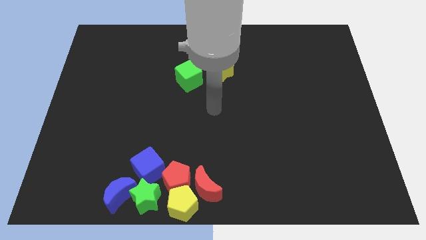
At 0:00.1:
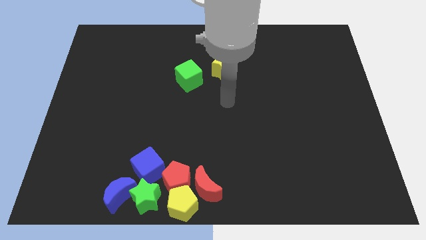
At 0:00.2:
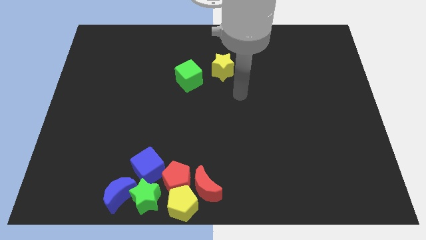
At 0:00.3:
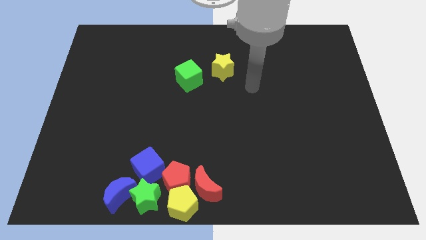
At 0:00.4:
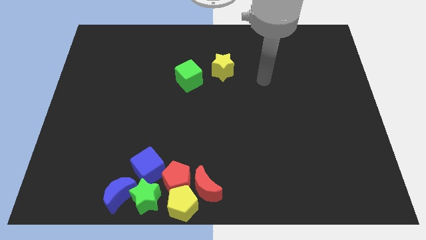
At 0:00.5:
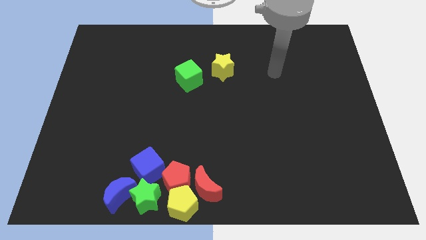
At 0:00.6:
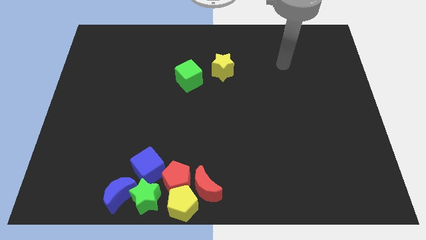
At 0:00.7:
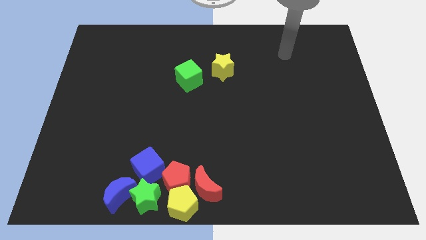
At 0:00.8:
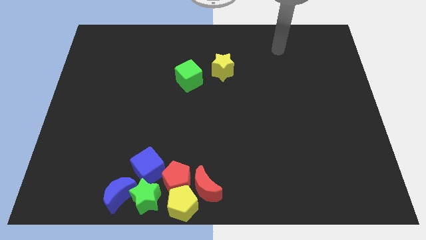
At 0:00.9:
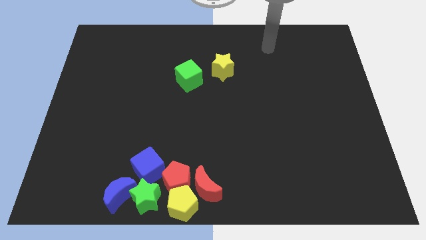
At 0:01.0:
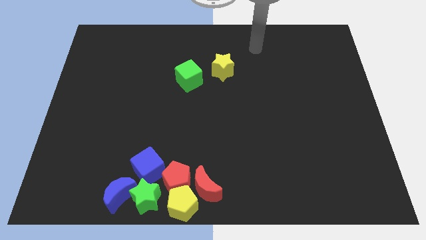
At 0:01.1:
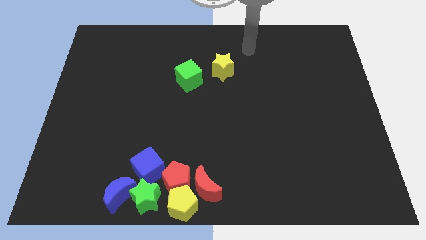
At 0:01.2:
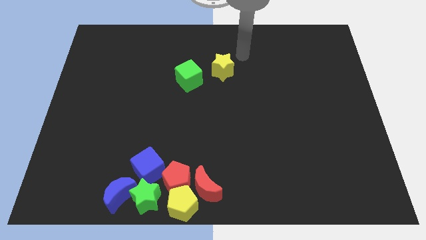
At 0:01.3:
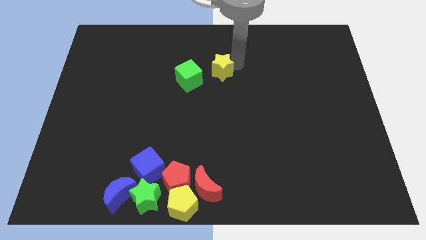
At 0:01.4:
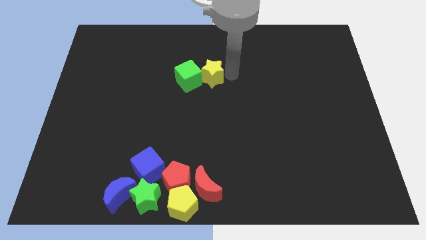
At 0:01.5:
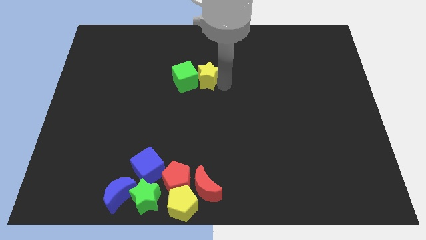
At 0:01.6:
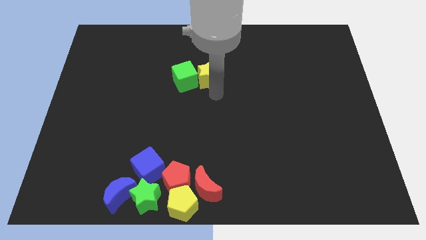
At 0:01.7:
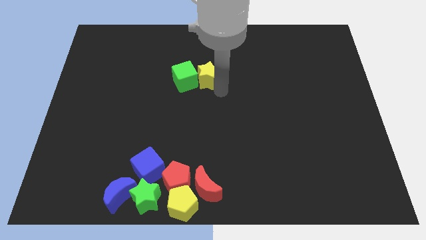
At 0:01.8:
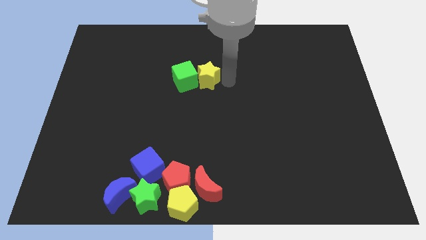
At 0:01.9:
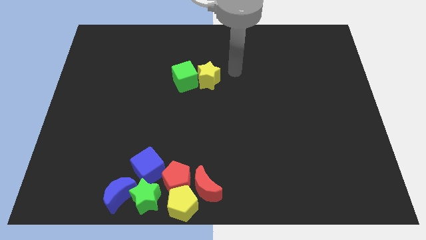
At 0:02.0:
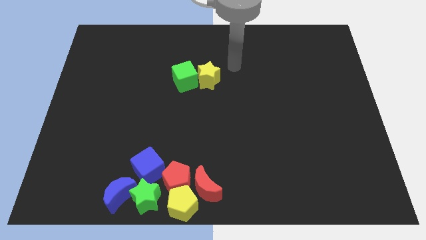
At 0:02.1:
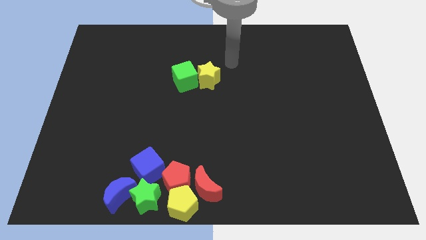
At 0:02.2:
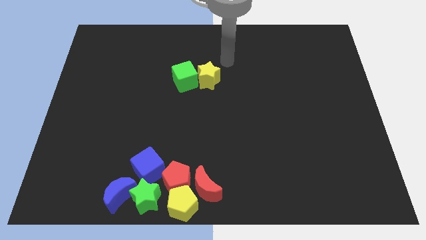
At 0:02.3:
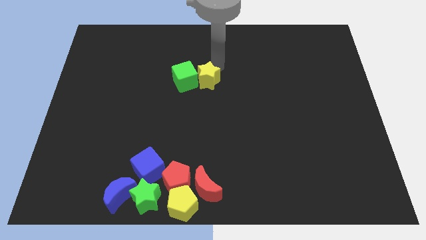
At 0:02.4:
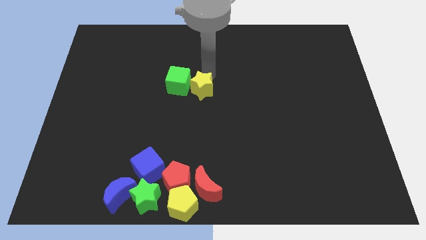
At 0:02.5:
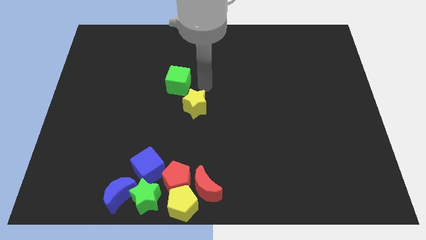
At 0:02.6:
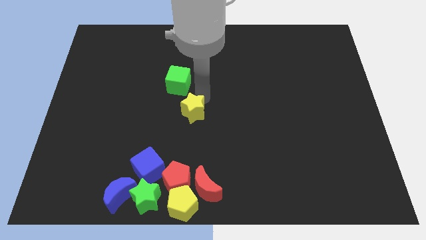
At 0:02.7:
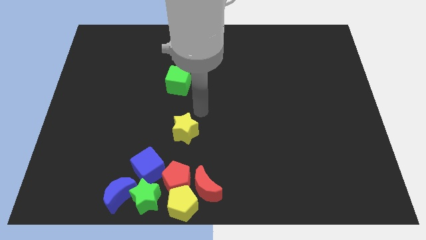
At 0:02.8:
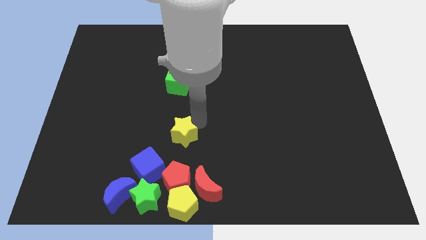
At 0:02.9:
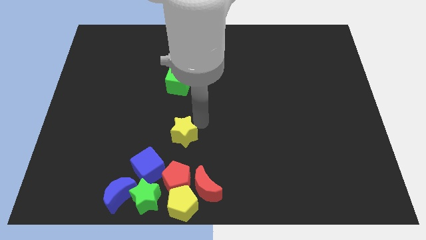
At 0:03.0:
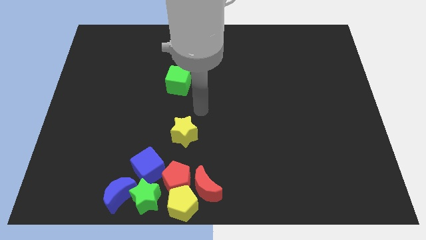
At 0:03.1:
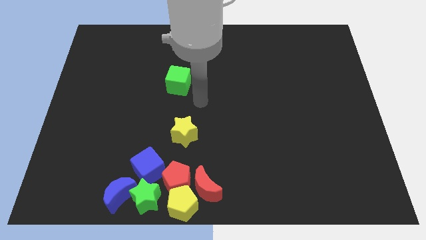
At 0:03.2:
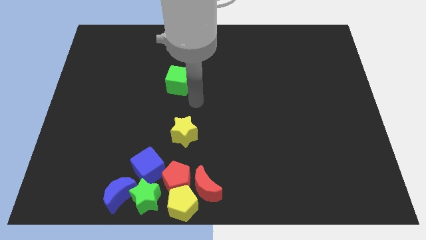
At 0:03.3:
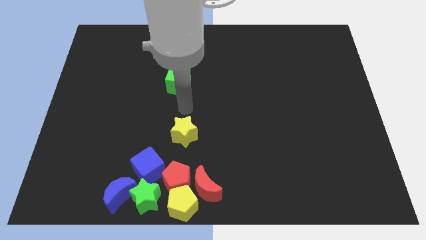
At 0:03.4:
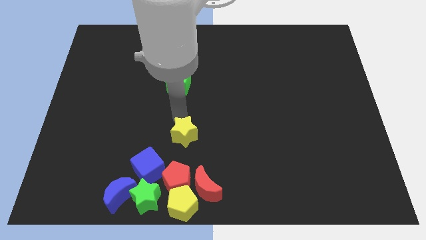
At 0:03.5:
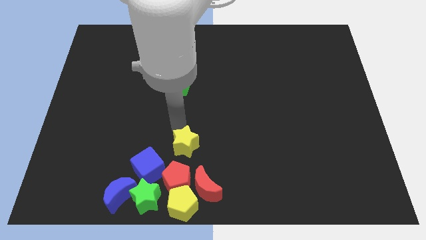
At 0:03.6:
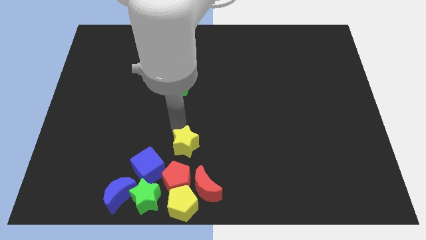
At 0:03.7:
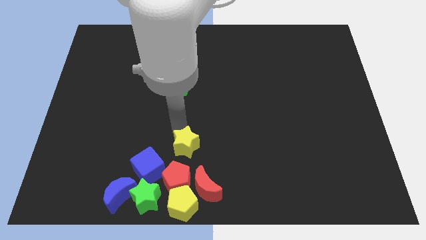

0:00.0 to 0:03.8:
separate yellow star from green cube

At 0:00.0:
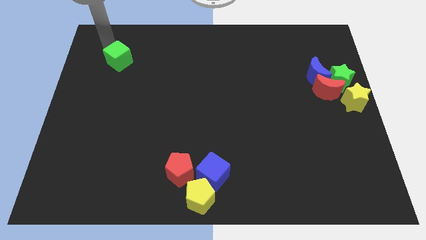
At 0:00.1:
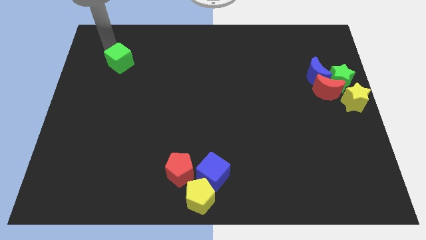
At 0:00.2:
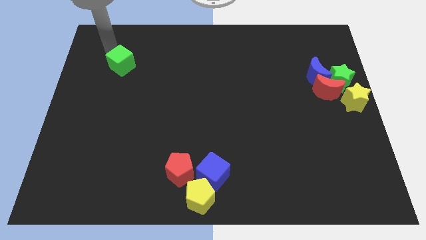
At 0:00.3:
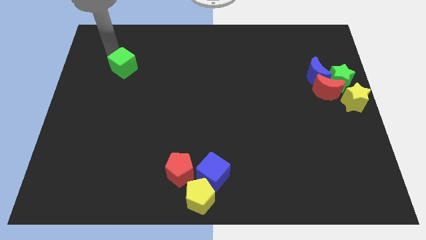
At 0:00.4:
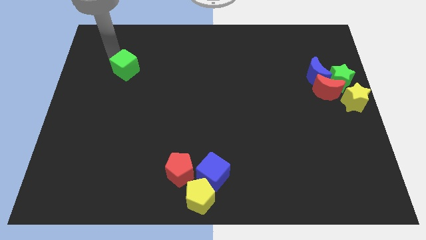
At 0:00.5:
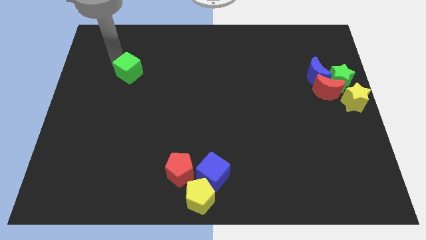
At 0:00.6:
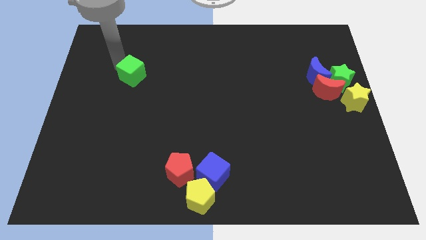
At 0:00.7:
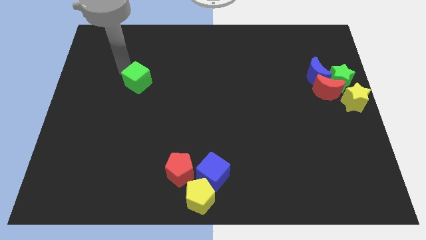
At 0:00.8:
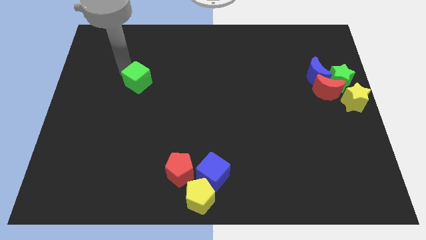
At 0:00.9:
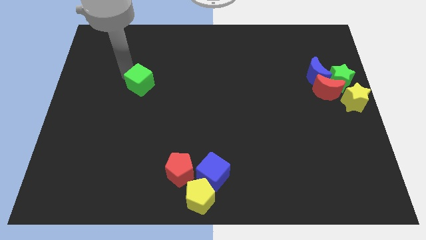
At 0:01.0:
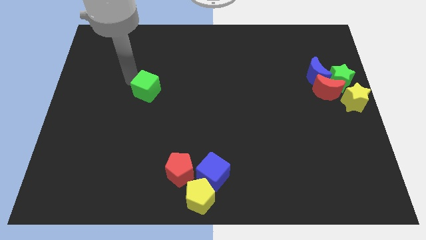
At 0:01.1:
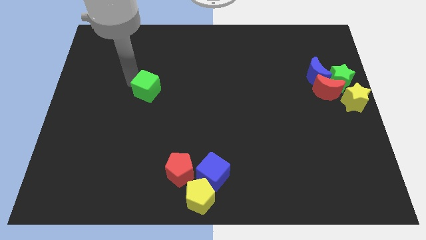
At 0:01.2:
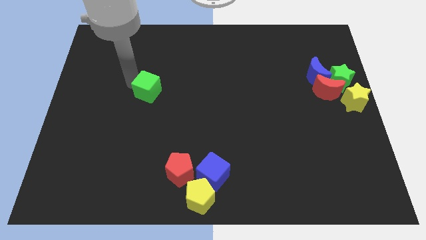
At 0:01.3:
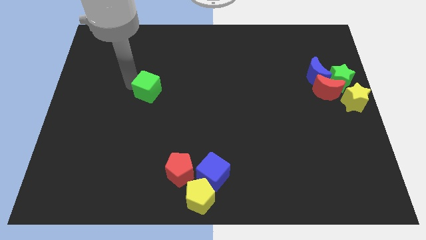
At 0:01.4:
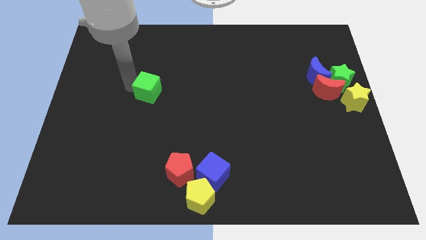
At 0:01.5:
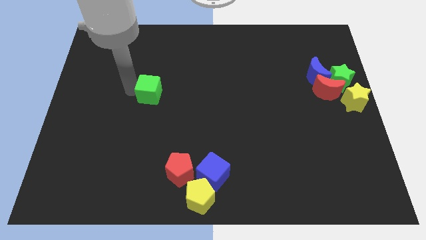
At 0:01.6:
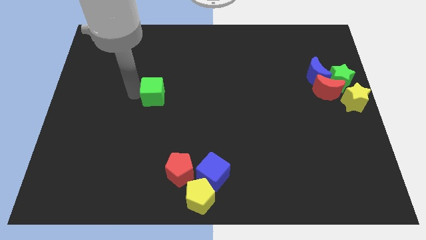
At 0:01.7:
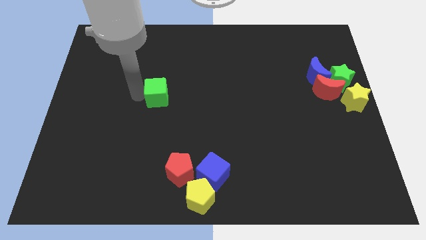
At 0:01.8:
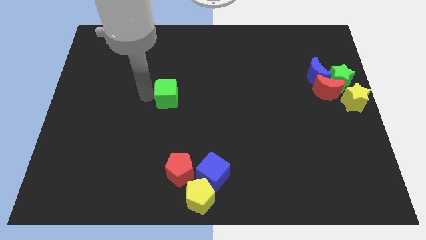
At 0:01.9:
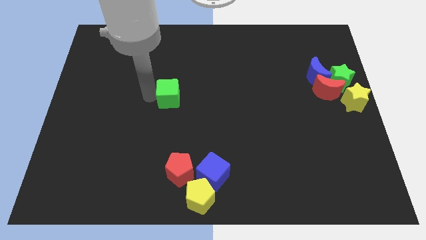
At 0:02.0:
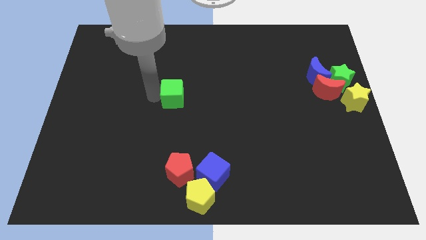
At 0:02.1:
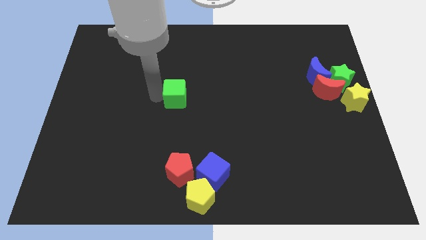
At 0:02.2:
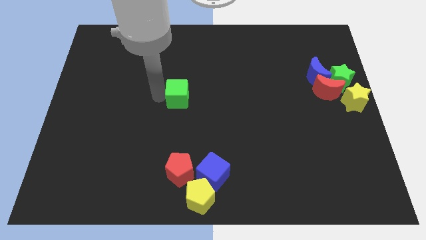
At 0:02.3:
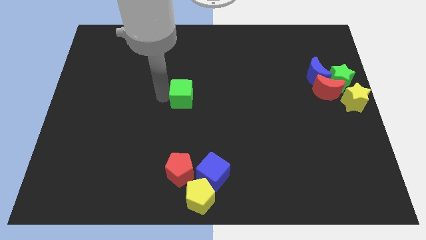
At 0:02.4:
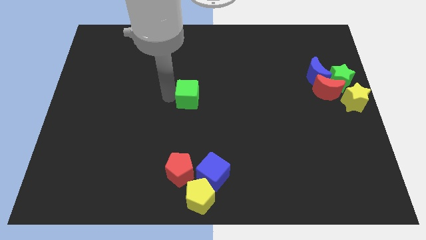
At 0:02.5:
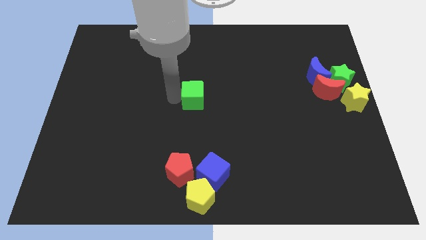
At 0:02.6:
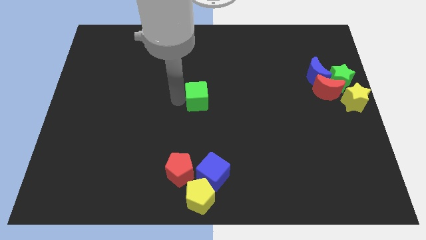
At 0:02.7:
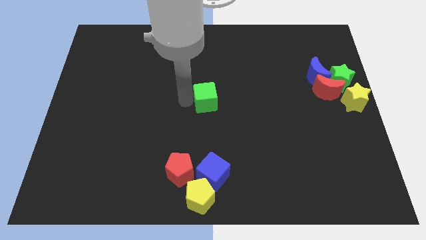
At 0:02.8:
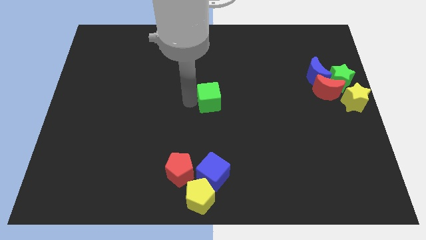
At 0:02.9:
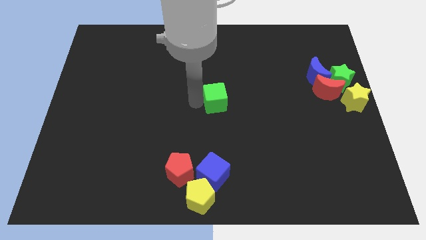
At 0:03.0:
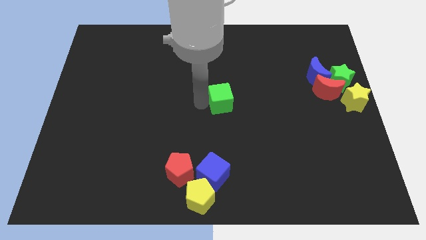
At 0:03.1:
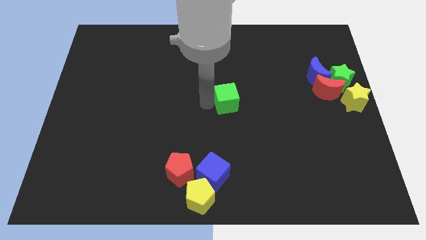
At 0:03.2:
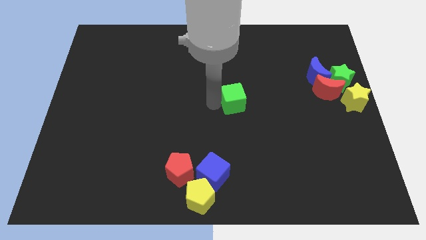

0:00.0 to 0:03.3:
place green cube at the center of the board

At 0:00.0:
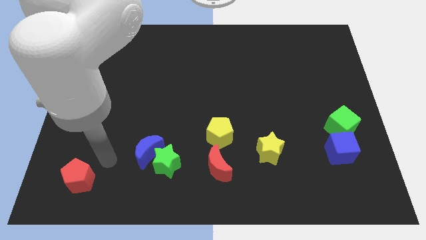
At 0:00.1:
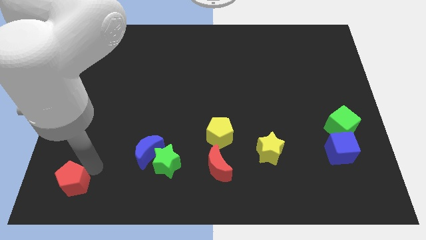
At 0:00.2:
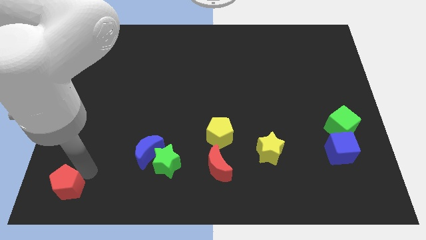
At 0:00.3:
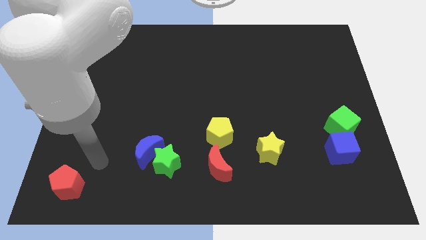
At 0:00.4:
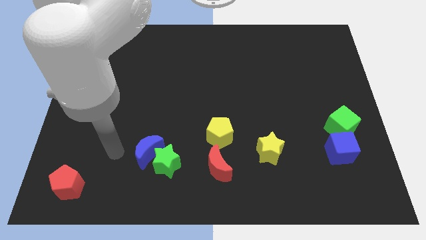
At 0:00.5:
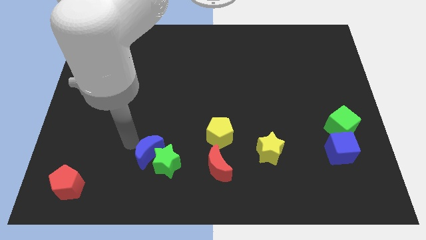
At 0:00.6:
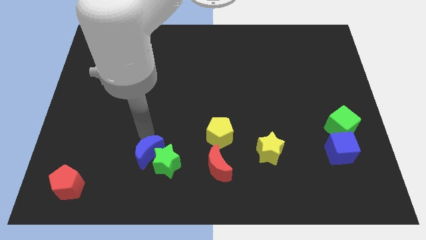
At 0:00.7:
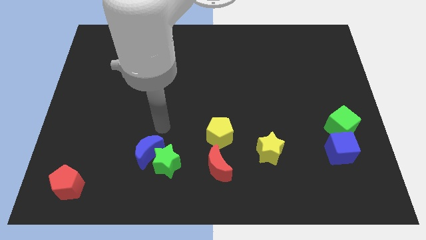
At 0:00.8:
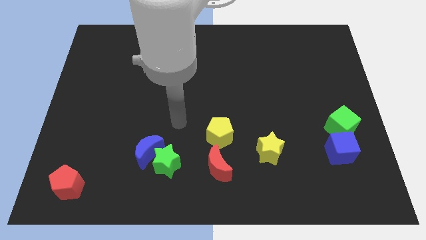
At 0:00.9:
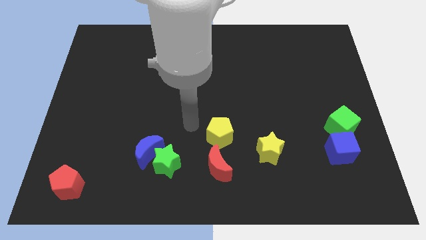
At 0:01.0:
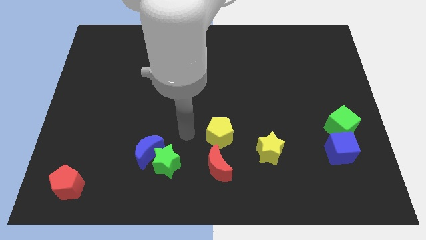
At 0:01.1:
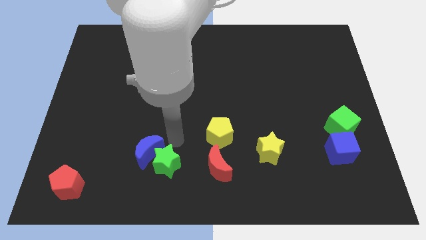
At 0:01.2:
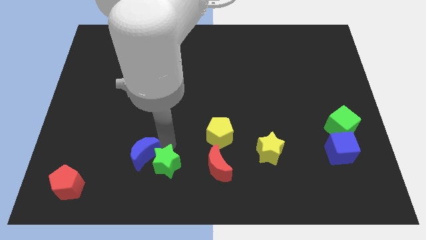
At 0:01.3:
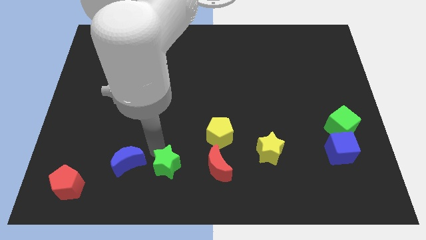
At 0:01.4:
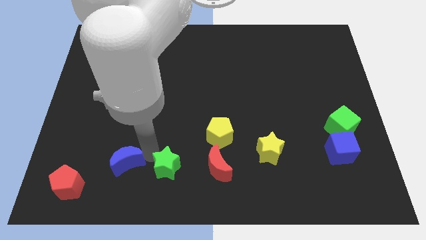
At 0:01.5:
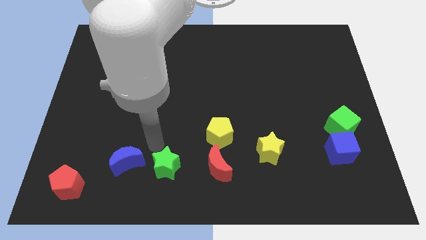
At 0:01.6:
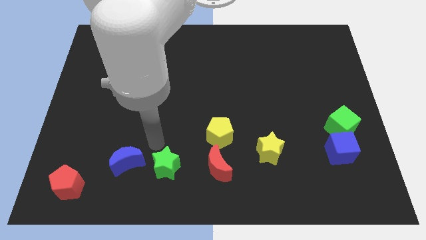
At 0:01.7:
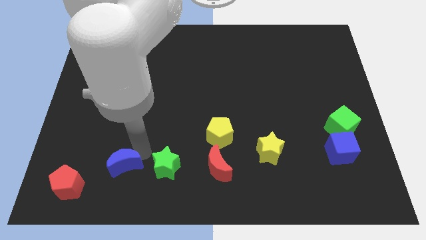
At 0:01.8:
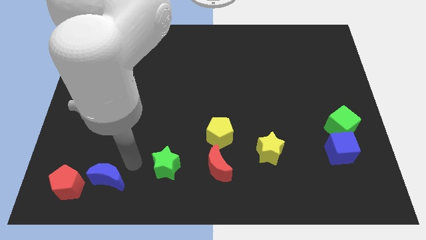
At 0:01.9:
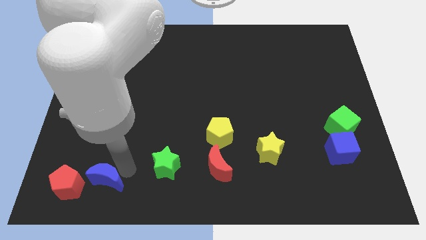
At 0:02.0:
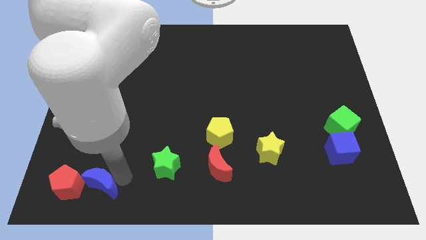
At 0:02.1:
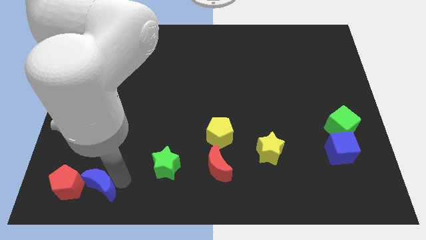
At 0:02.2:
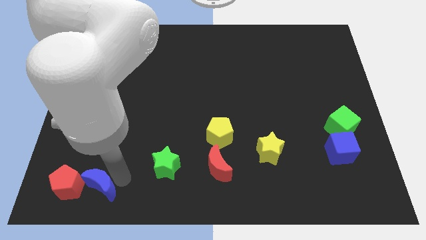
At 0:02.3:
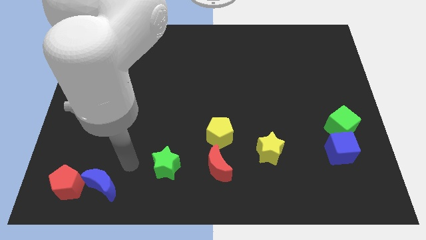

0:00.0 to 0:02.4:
move the blue crescent into the red pentagon
